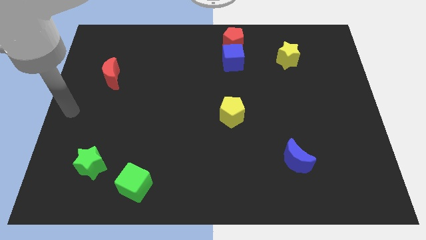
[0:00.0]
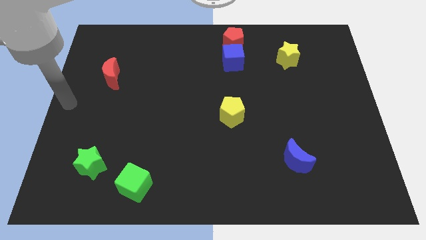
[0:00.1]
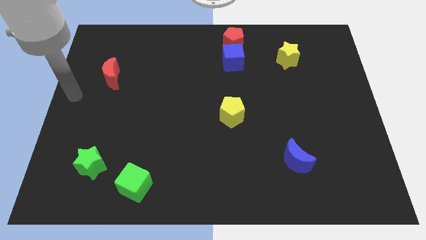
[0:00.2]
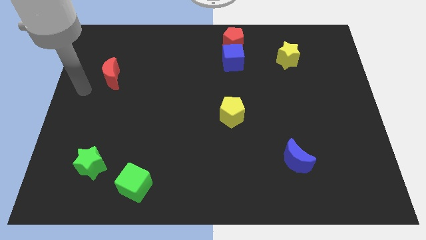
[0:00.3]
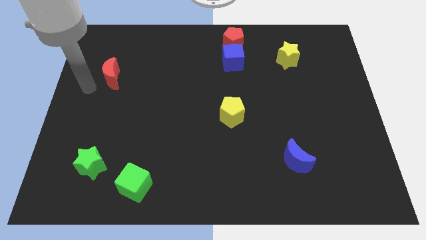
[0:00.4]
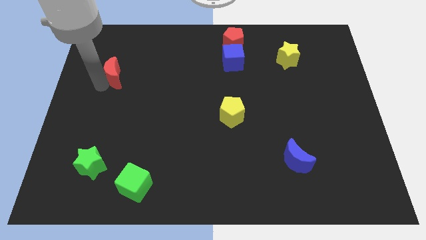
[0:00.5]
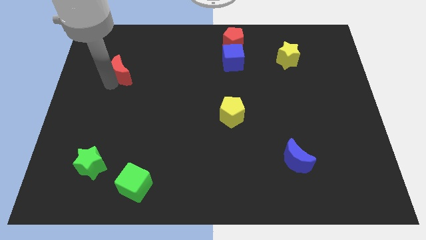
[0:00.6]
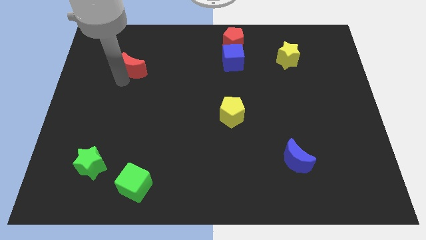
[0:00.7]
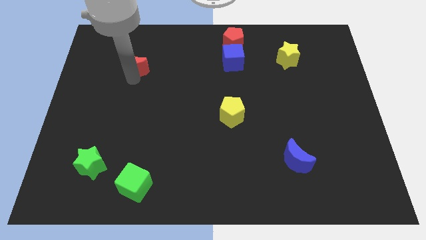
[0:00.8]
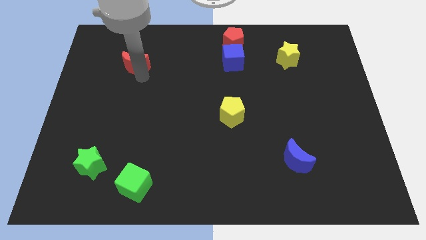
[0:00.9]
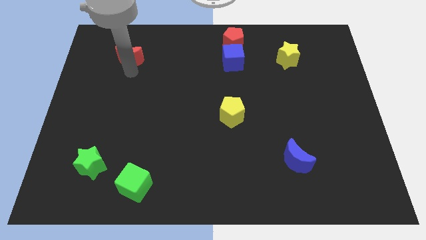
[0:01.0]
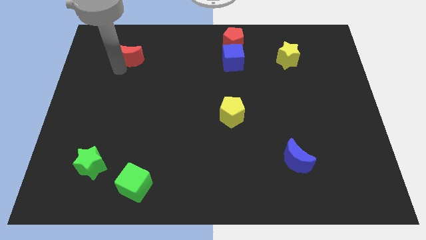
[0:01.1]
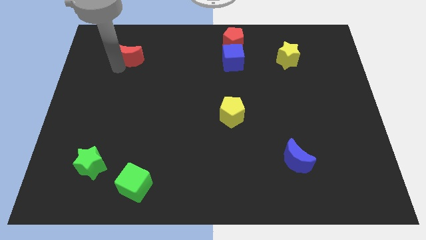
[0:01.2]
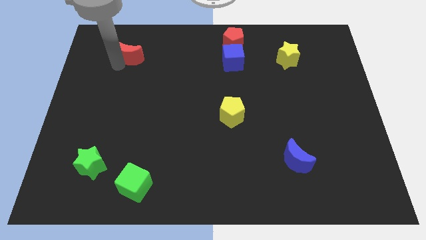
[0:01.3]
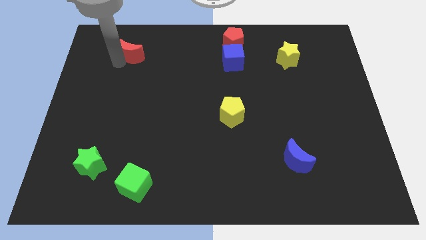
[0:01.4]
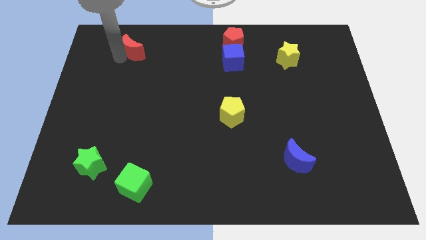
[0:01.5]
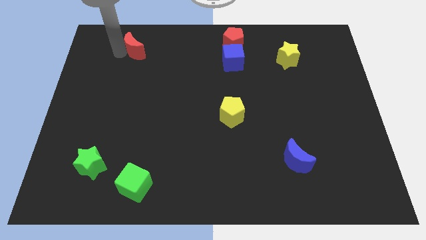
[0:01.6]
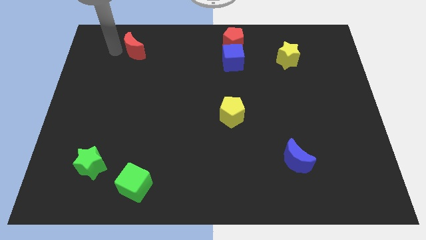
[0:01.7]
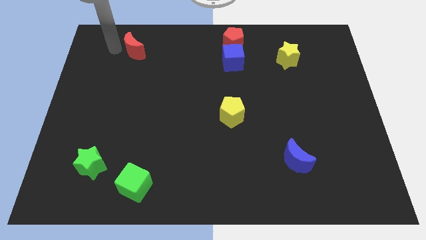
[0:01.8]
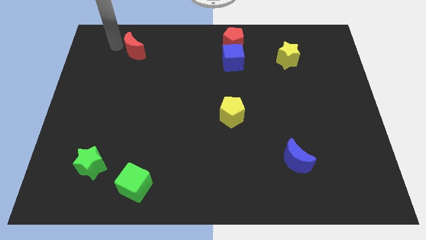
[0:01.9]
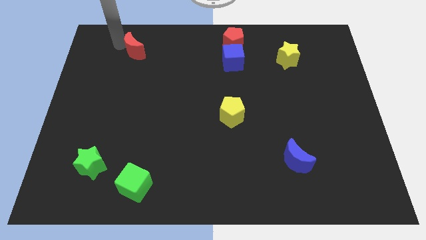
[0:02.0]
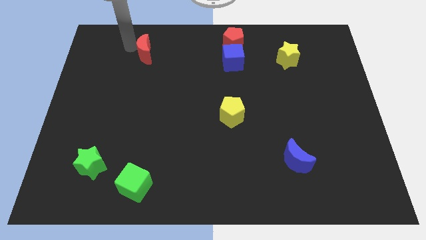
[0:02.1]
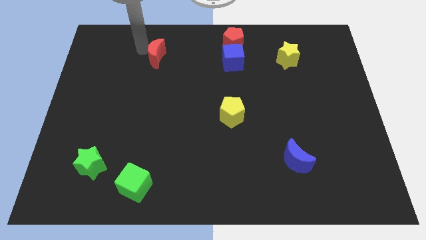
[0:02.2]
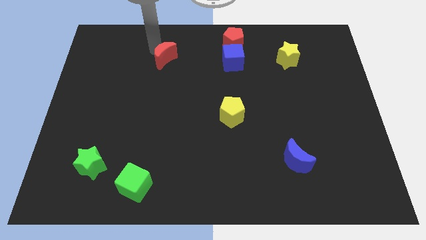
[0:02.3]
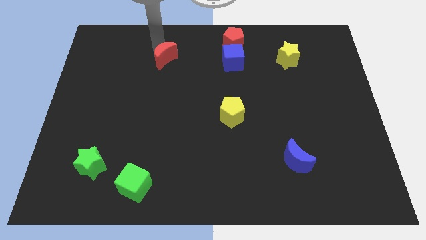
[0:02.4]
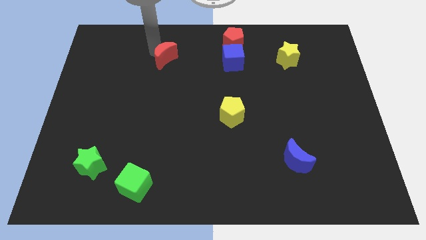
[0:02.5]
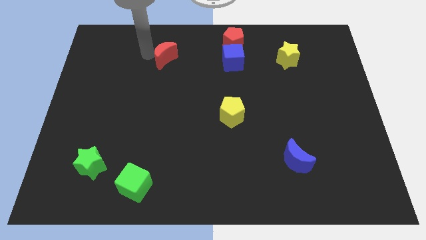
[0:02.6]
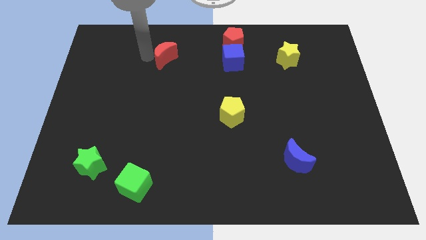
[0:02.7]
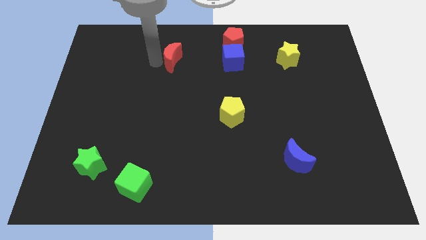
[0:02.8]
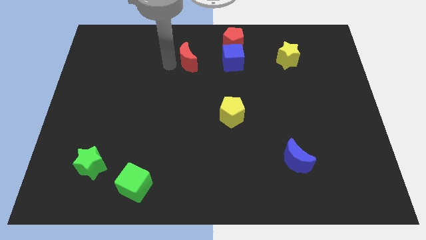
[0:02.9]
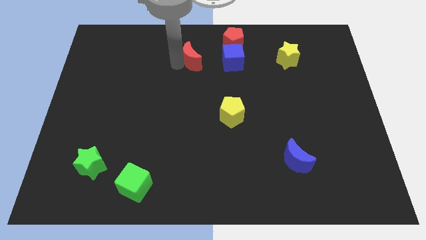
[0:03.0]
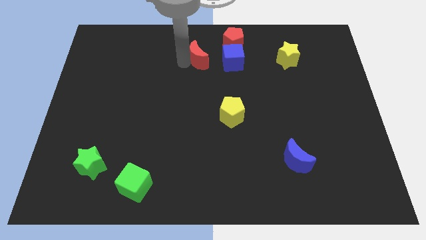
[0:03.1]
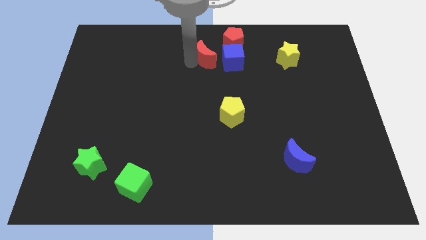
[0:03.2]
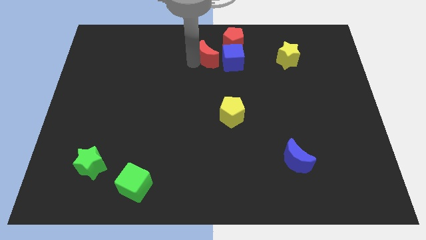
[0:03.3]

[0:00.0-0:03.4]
move red moon towards blue cube

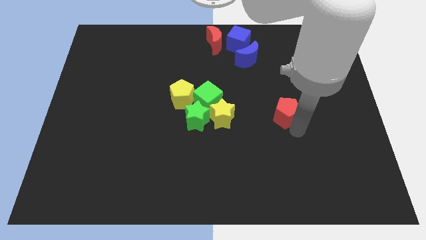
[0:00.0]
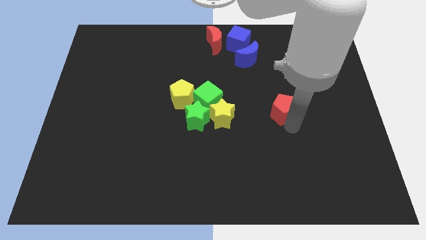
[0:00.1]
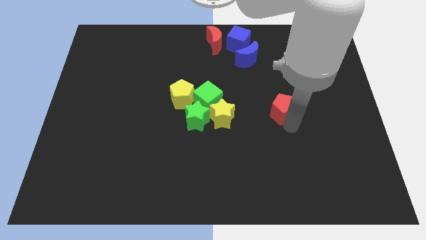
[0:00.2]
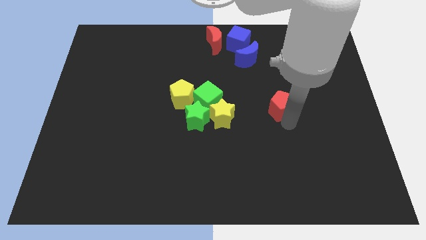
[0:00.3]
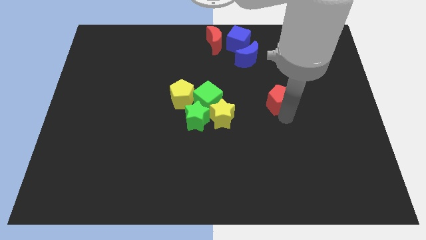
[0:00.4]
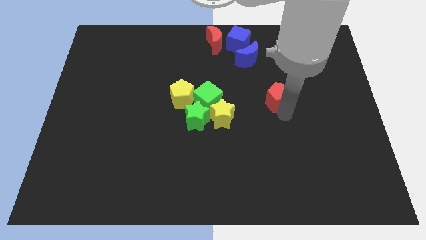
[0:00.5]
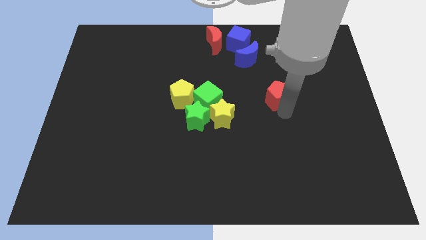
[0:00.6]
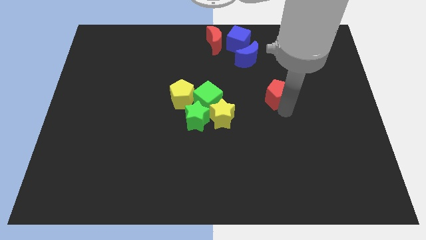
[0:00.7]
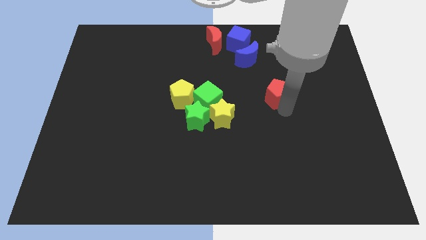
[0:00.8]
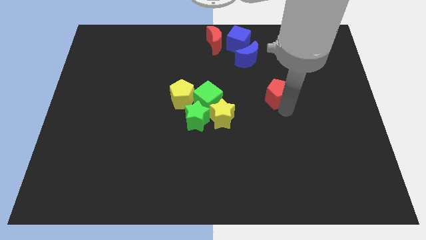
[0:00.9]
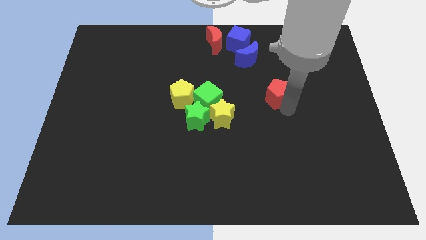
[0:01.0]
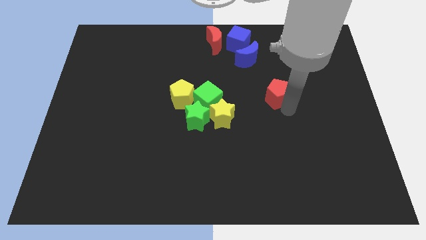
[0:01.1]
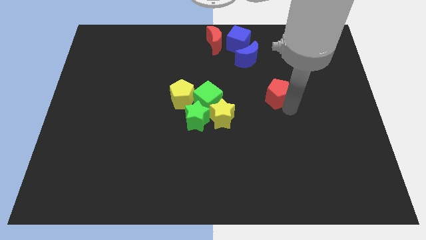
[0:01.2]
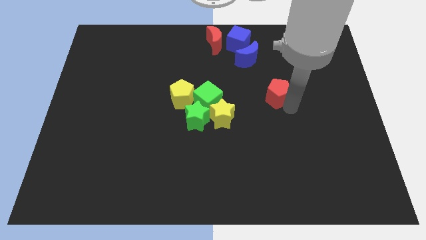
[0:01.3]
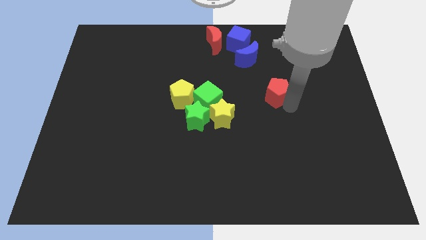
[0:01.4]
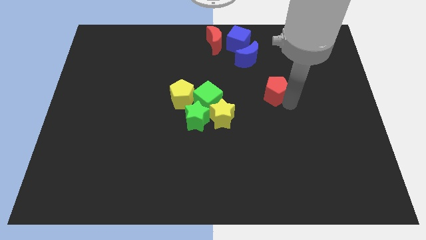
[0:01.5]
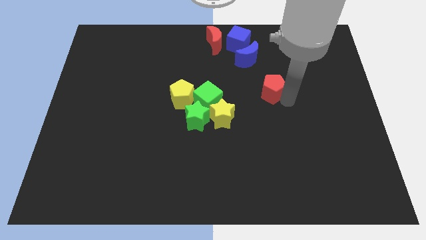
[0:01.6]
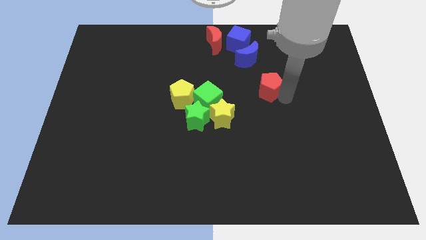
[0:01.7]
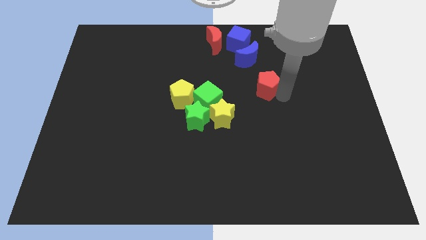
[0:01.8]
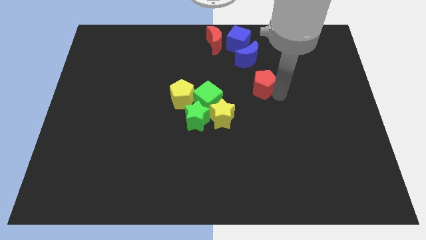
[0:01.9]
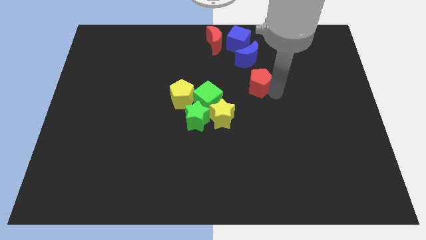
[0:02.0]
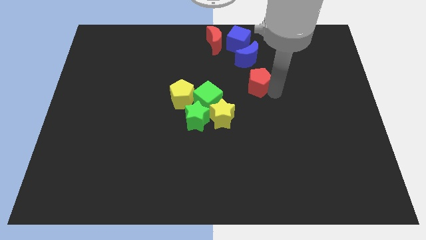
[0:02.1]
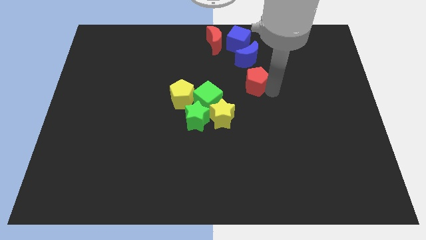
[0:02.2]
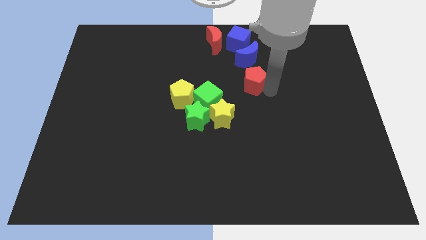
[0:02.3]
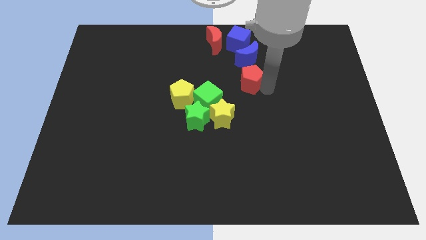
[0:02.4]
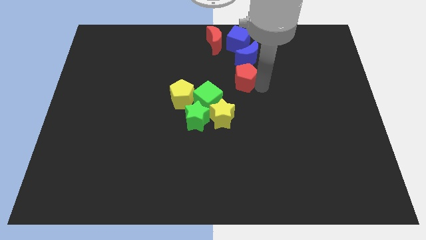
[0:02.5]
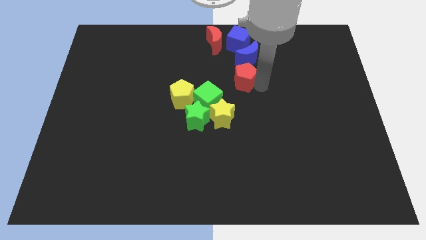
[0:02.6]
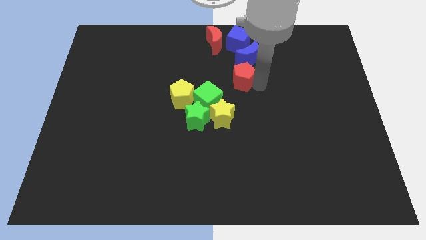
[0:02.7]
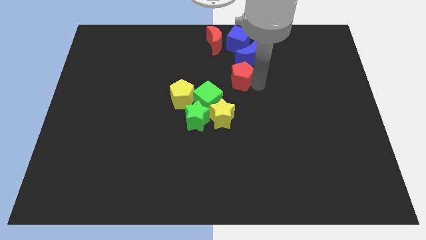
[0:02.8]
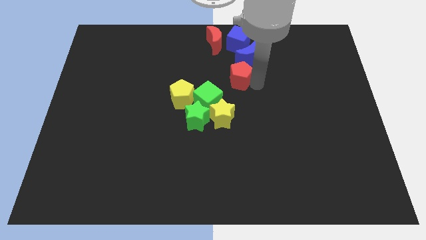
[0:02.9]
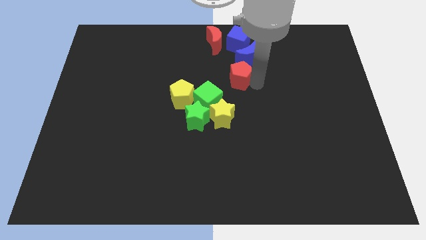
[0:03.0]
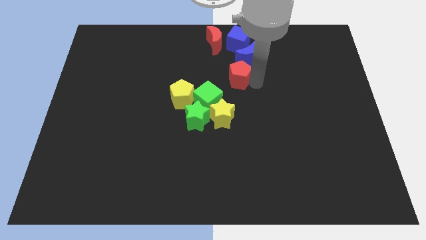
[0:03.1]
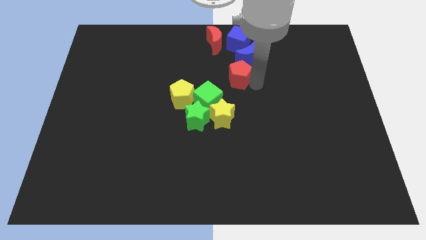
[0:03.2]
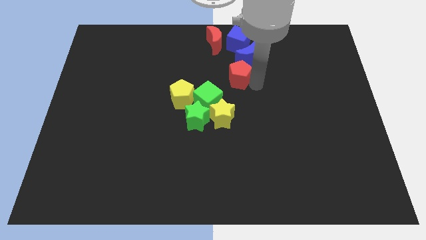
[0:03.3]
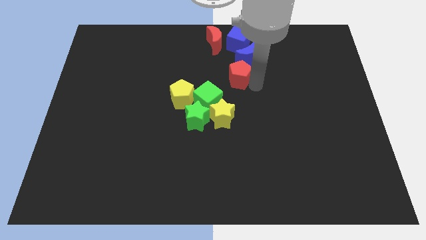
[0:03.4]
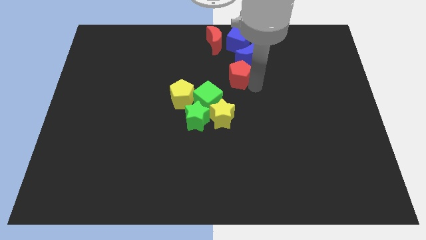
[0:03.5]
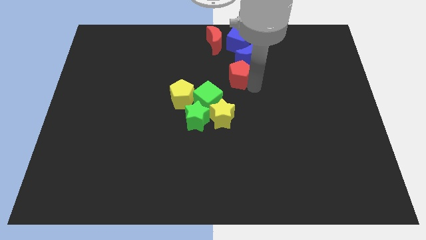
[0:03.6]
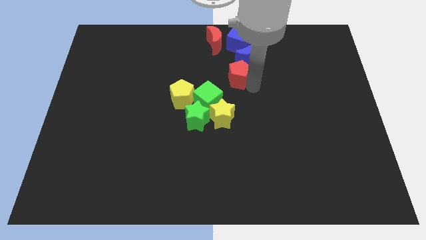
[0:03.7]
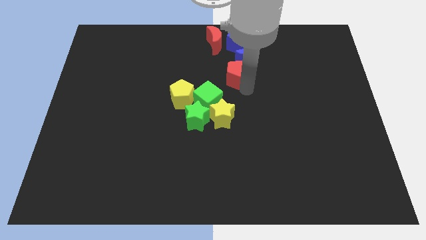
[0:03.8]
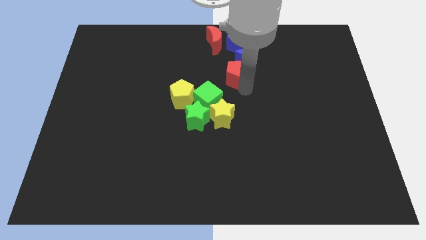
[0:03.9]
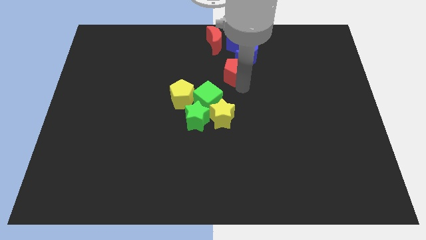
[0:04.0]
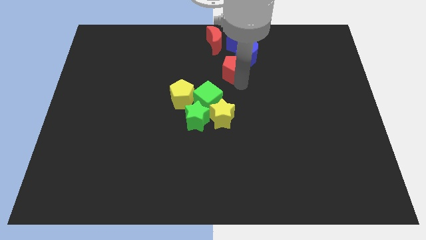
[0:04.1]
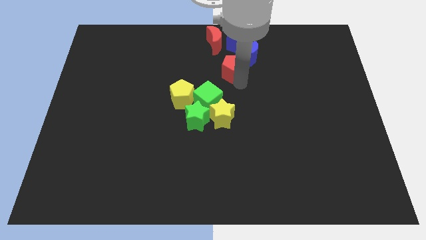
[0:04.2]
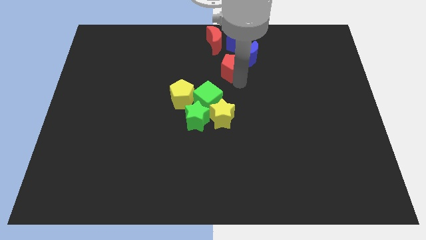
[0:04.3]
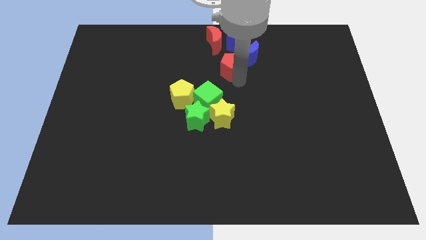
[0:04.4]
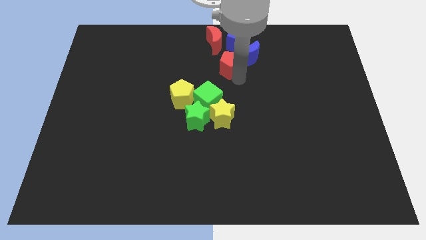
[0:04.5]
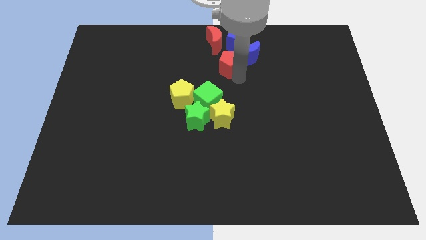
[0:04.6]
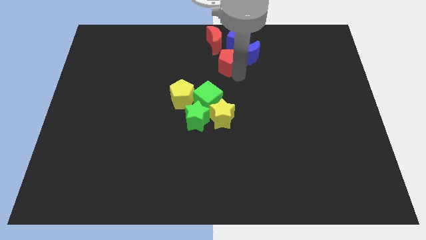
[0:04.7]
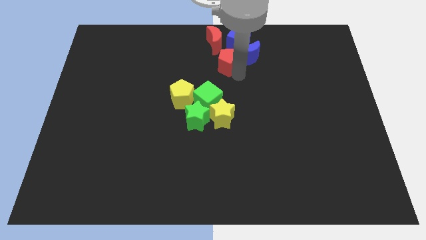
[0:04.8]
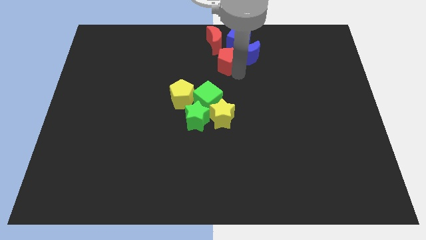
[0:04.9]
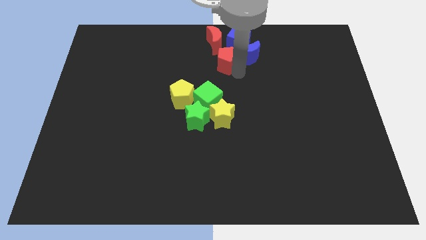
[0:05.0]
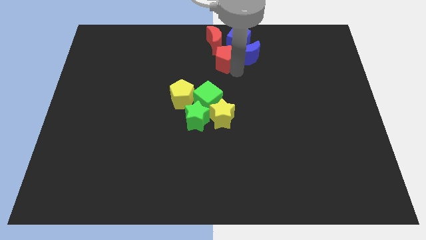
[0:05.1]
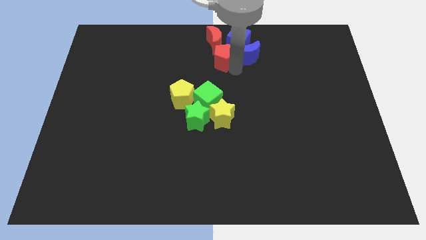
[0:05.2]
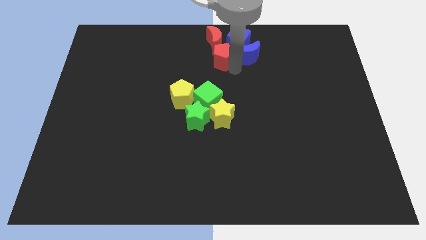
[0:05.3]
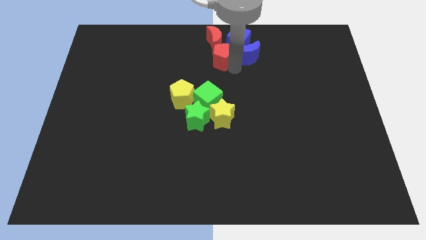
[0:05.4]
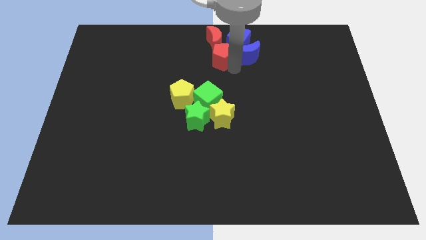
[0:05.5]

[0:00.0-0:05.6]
push the red pentagon below to the red crescent
